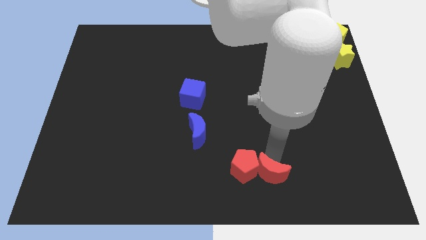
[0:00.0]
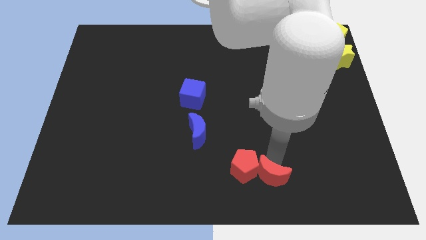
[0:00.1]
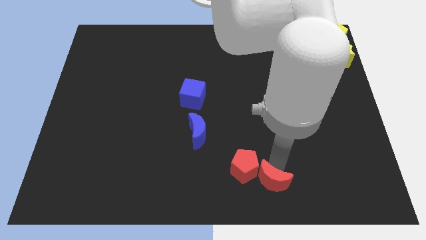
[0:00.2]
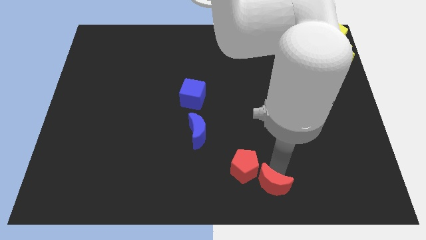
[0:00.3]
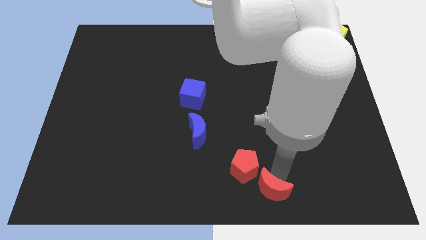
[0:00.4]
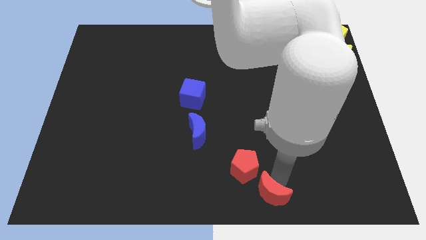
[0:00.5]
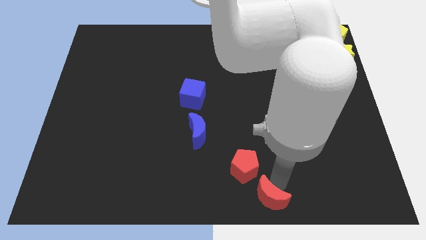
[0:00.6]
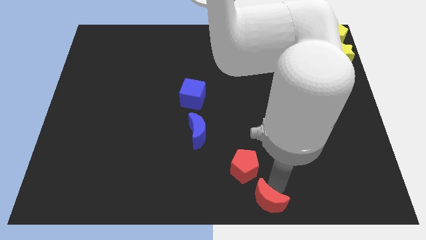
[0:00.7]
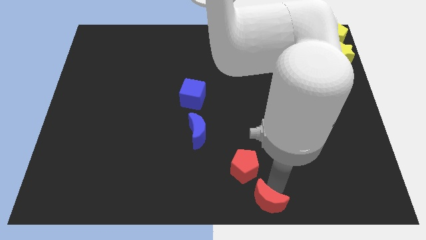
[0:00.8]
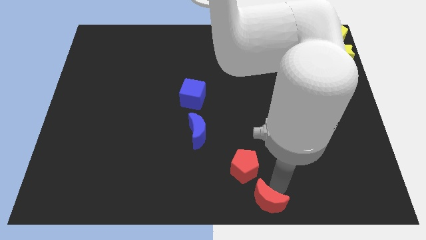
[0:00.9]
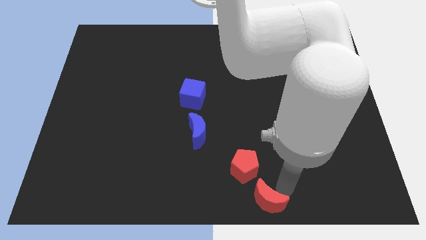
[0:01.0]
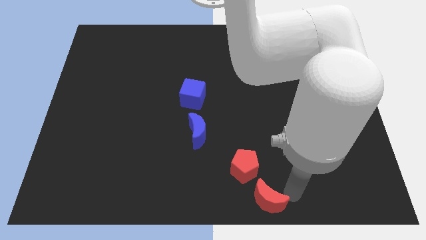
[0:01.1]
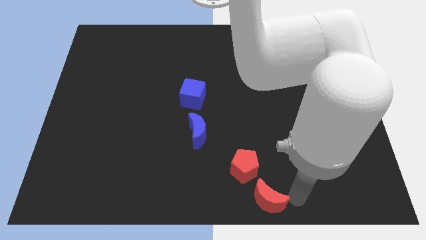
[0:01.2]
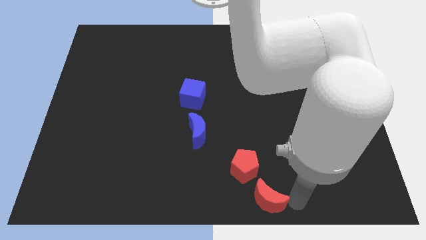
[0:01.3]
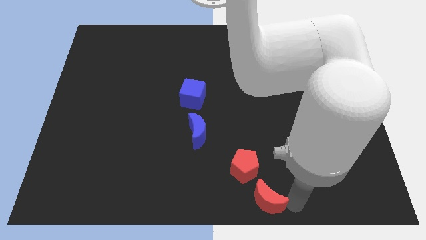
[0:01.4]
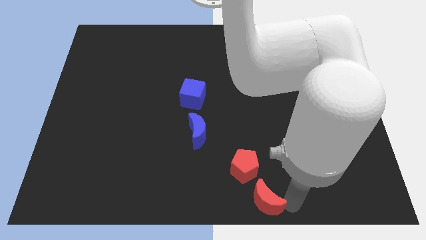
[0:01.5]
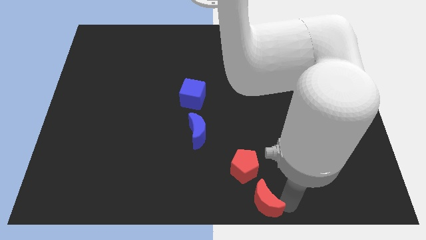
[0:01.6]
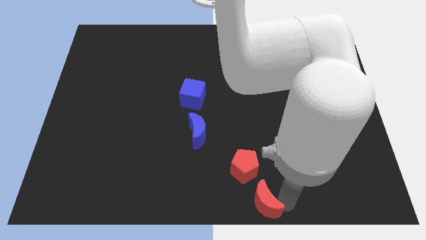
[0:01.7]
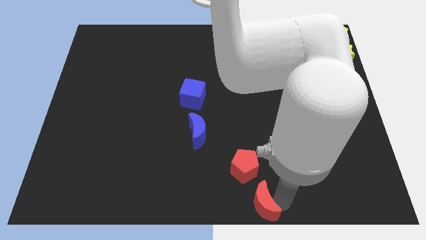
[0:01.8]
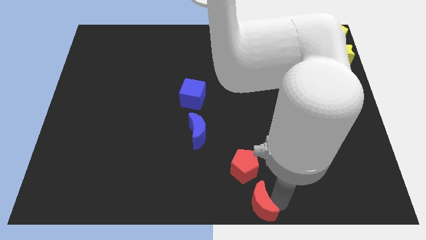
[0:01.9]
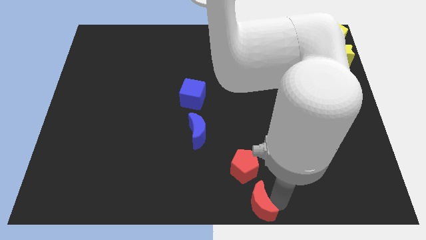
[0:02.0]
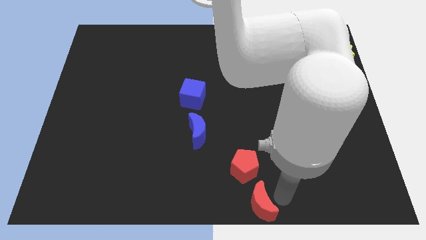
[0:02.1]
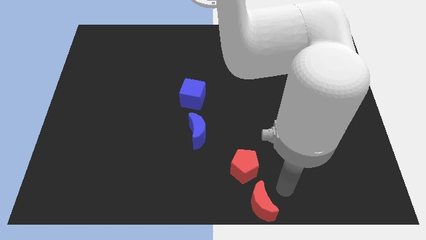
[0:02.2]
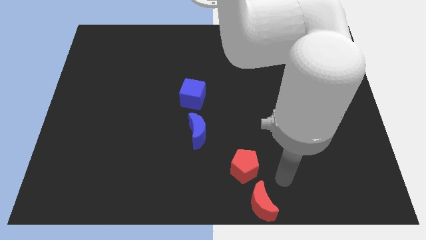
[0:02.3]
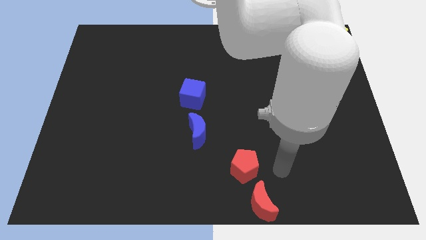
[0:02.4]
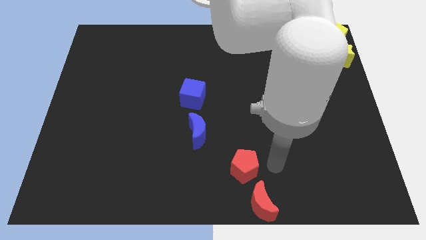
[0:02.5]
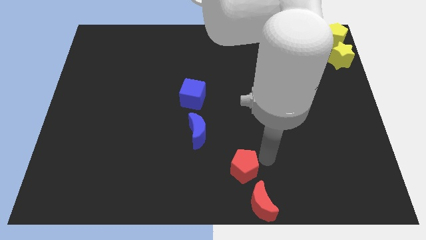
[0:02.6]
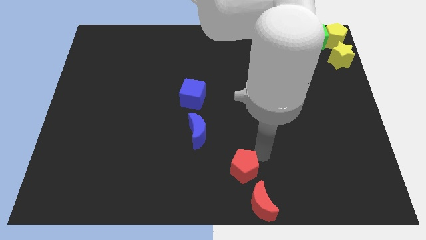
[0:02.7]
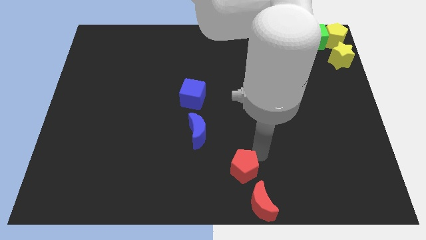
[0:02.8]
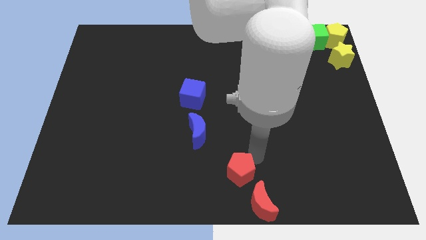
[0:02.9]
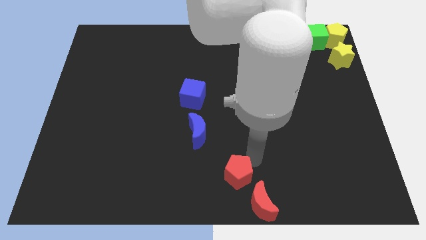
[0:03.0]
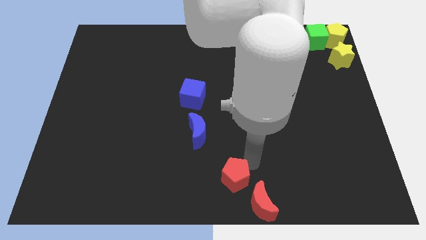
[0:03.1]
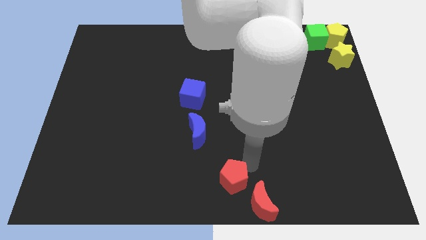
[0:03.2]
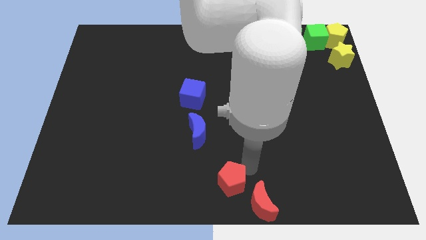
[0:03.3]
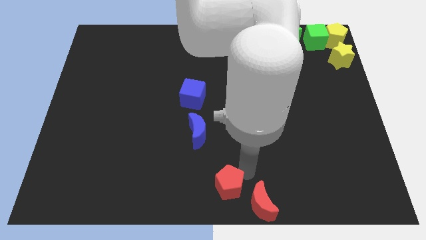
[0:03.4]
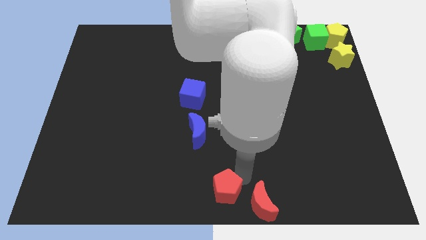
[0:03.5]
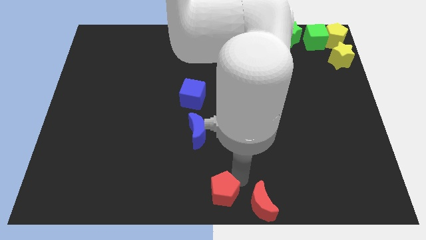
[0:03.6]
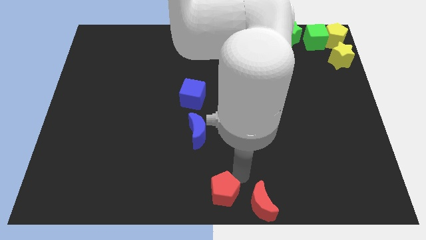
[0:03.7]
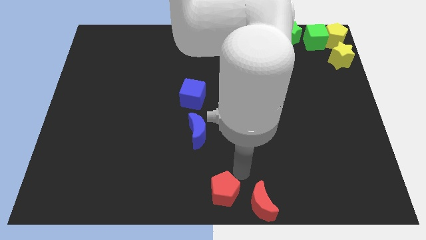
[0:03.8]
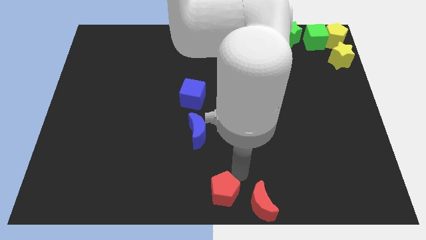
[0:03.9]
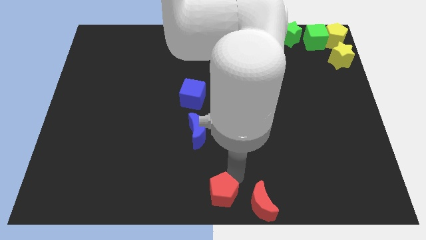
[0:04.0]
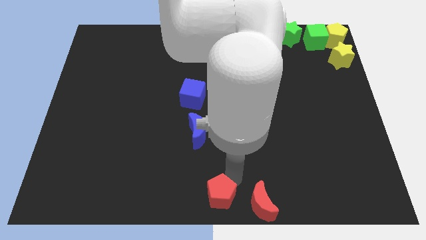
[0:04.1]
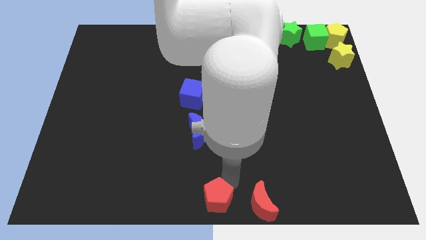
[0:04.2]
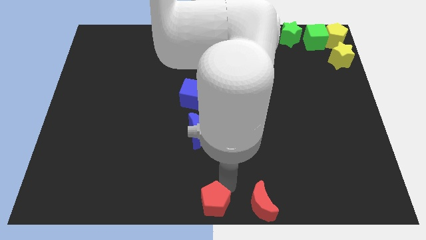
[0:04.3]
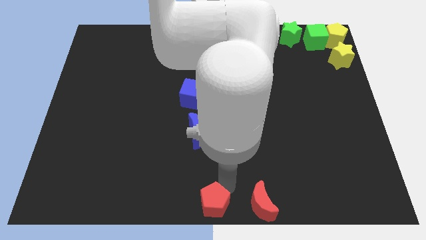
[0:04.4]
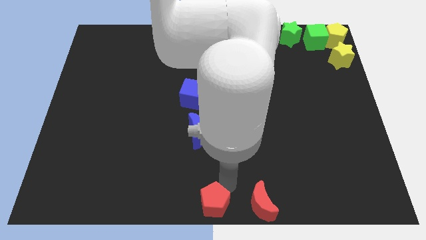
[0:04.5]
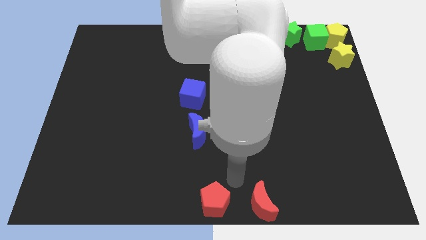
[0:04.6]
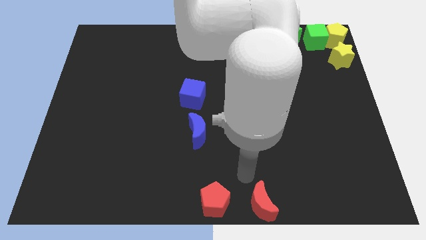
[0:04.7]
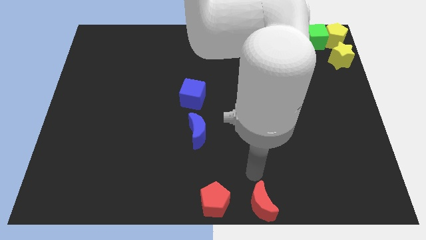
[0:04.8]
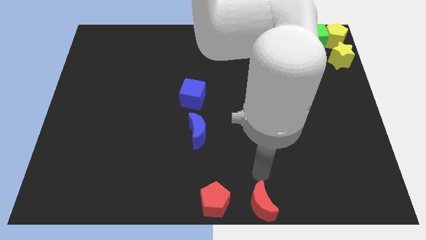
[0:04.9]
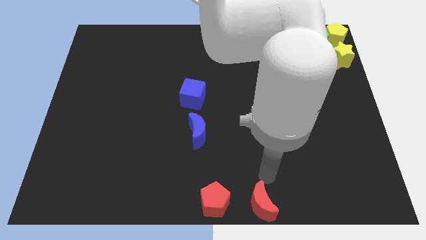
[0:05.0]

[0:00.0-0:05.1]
place the red blocks horizontally at the bottom side of the board

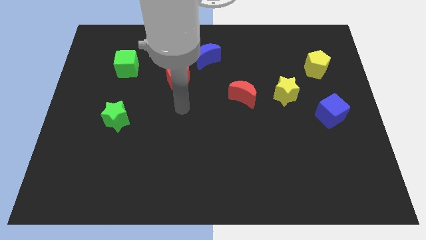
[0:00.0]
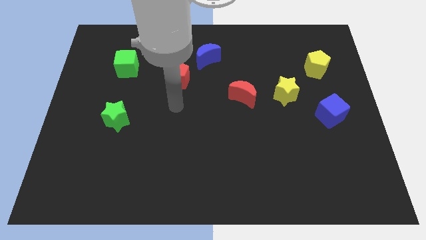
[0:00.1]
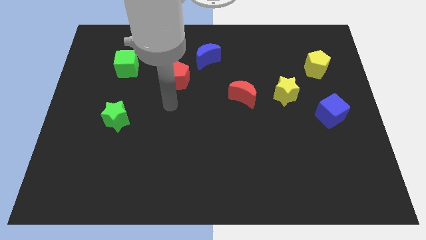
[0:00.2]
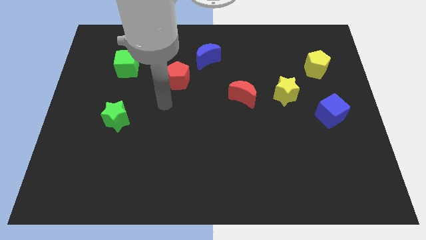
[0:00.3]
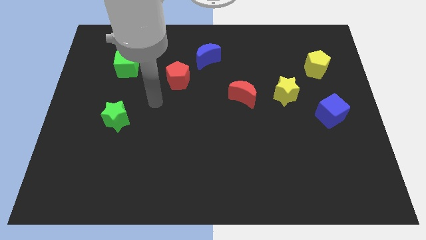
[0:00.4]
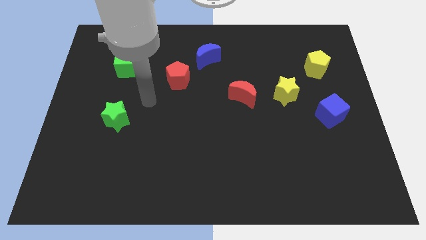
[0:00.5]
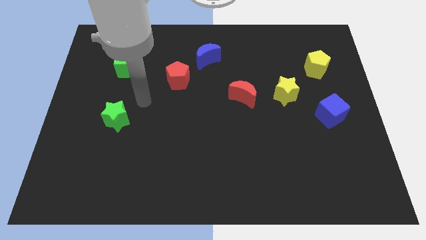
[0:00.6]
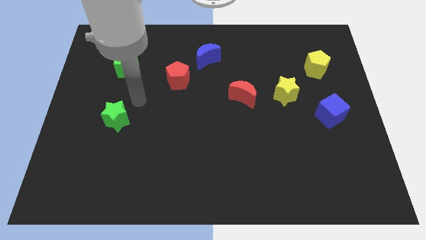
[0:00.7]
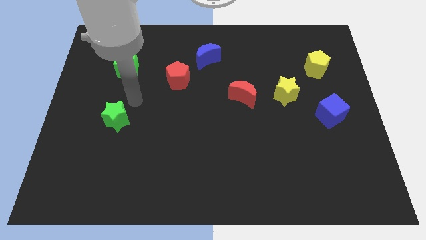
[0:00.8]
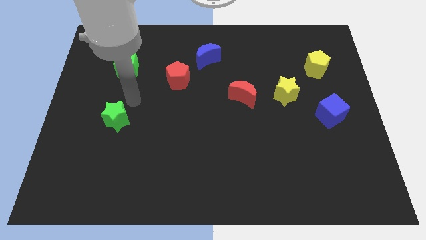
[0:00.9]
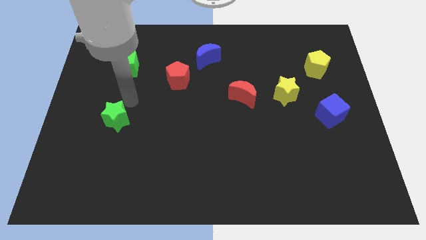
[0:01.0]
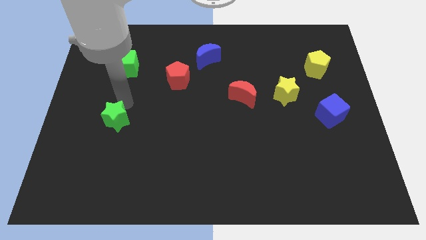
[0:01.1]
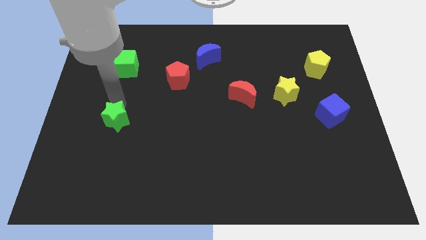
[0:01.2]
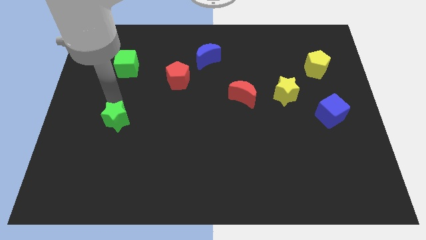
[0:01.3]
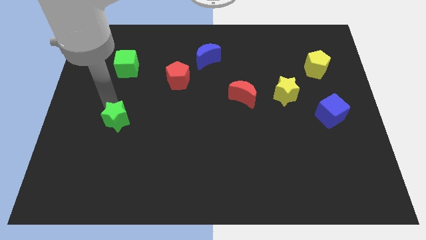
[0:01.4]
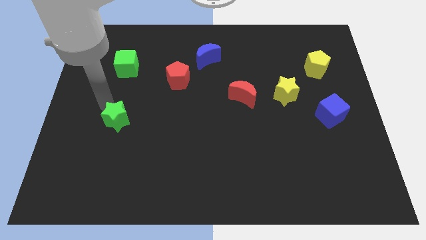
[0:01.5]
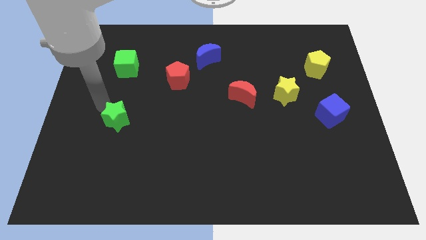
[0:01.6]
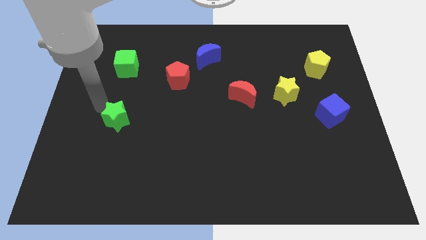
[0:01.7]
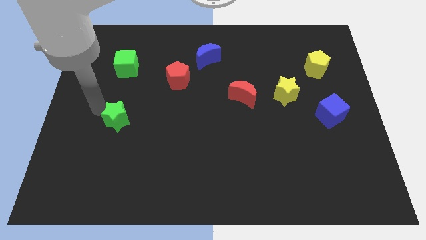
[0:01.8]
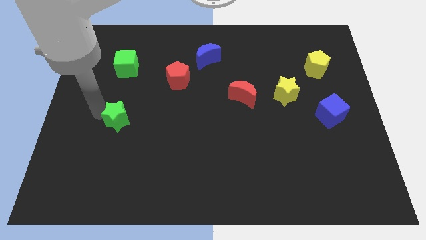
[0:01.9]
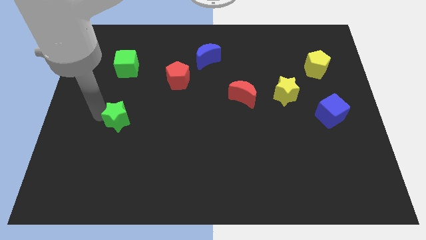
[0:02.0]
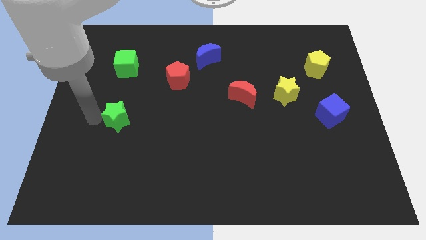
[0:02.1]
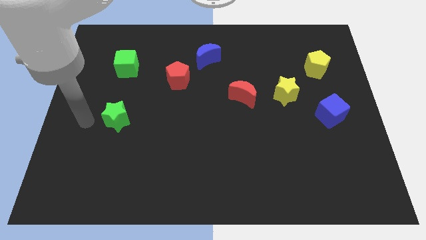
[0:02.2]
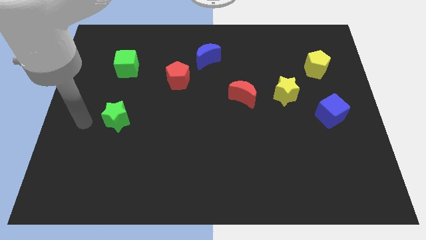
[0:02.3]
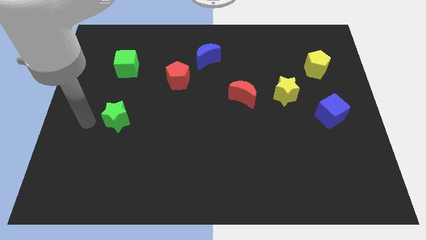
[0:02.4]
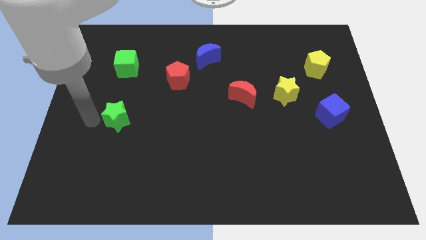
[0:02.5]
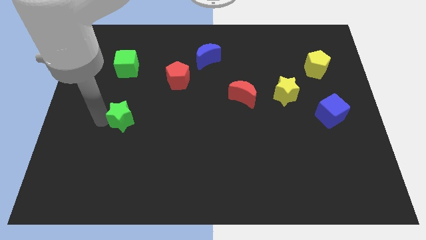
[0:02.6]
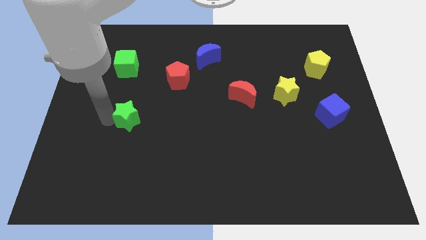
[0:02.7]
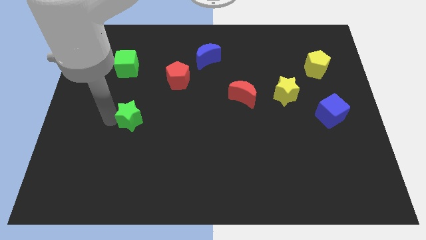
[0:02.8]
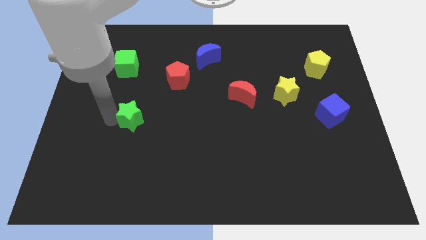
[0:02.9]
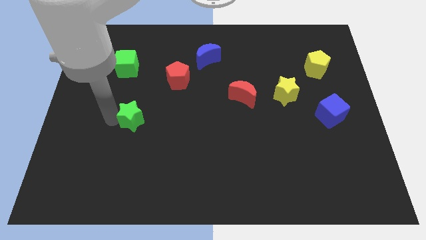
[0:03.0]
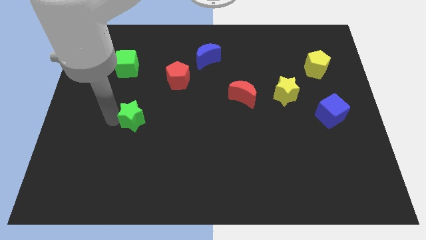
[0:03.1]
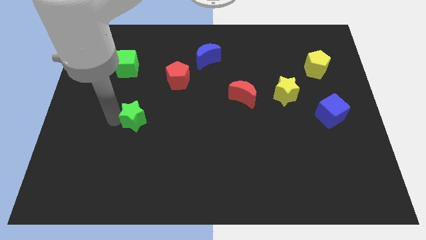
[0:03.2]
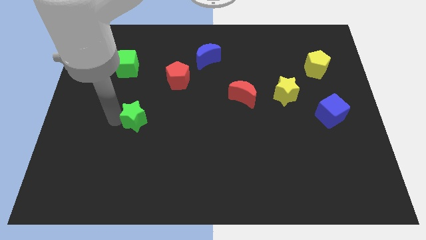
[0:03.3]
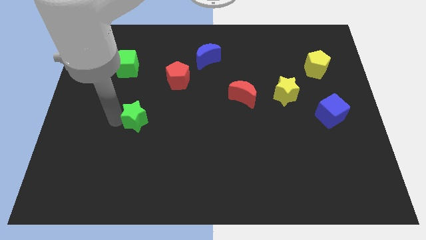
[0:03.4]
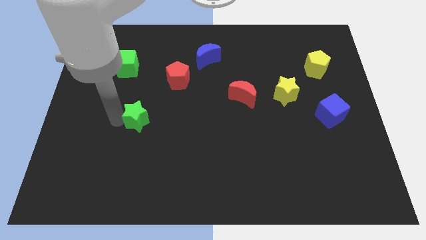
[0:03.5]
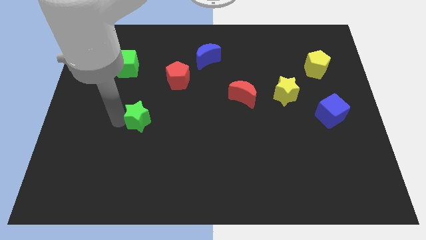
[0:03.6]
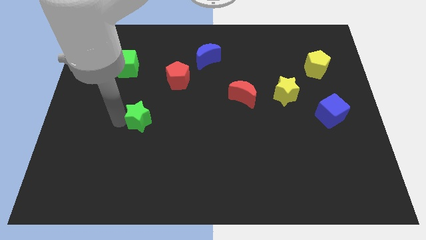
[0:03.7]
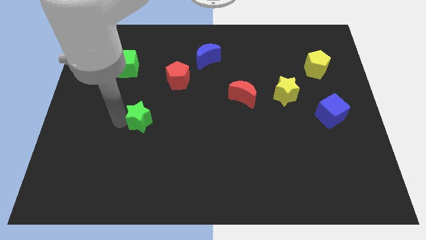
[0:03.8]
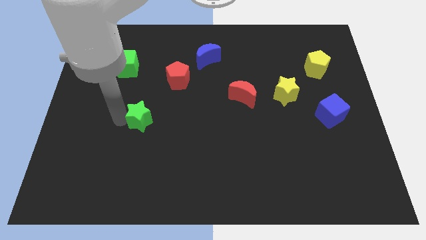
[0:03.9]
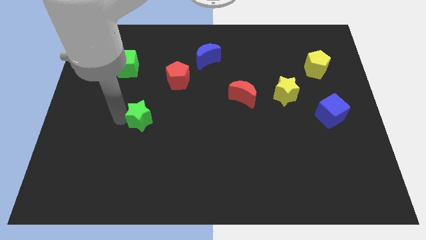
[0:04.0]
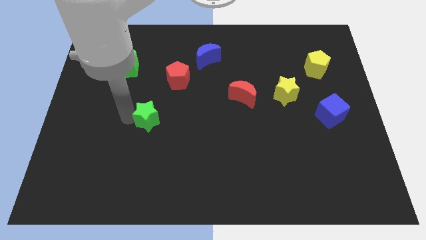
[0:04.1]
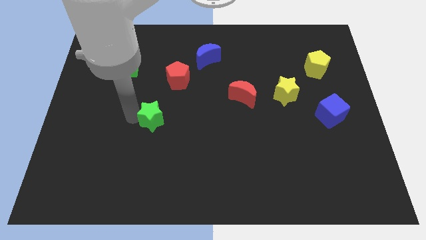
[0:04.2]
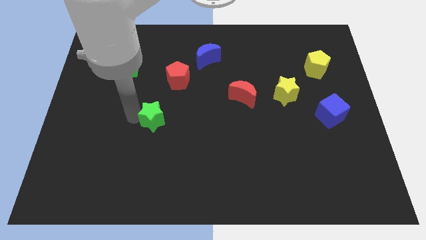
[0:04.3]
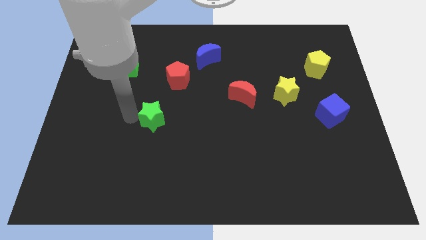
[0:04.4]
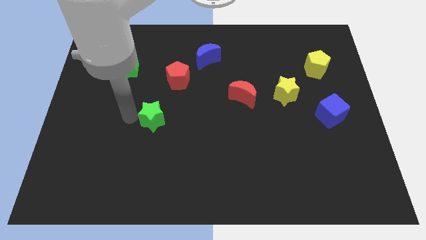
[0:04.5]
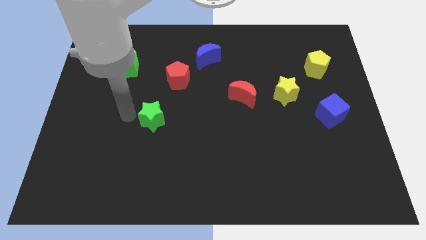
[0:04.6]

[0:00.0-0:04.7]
slightly move the green star towards the right
